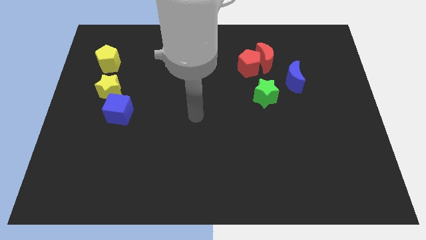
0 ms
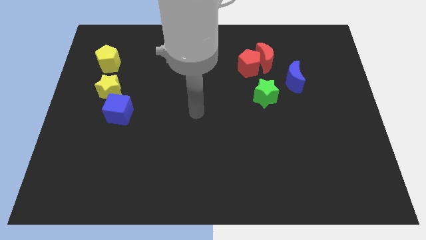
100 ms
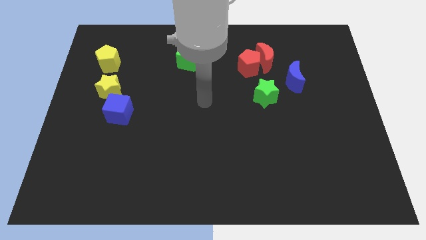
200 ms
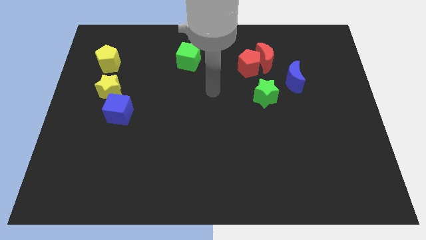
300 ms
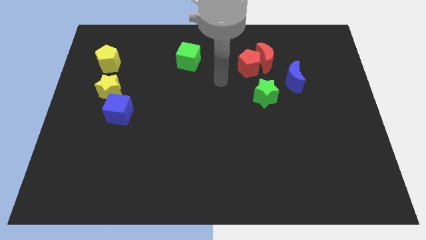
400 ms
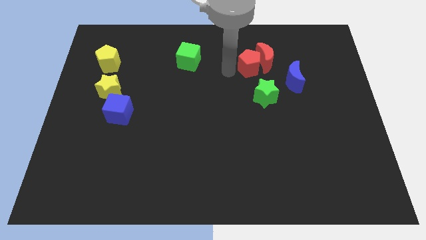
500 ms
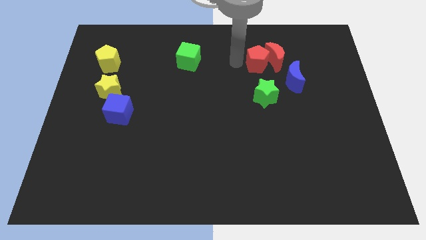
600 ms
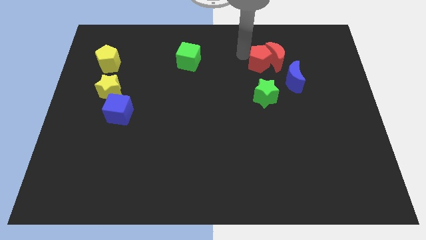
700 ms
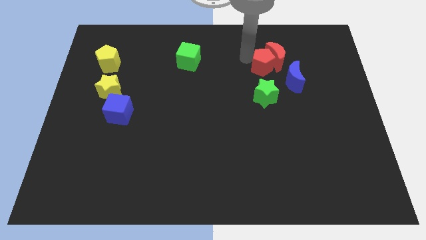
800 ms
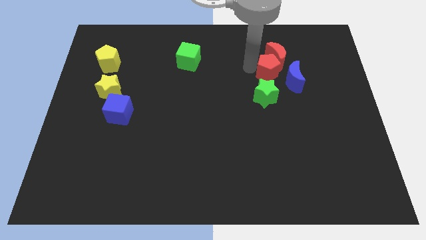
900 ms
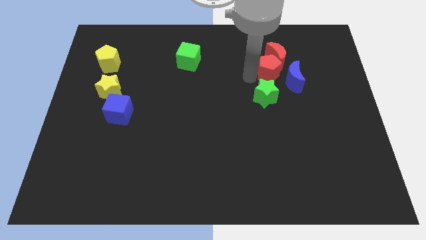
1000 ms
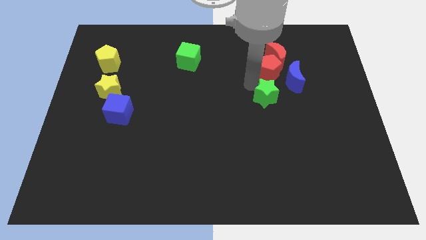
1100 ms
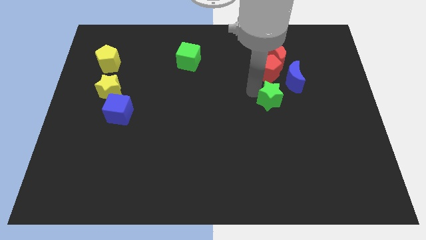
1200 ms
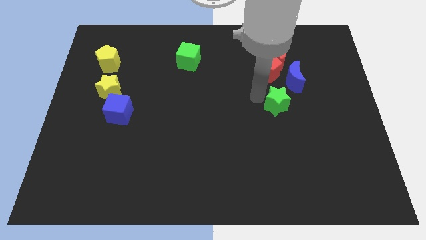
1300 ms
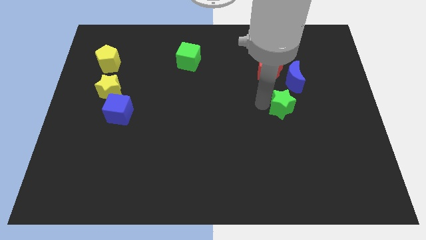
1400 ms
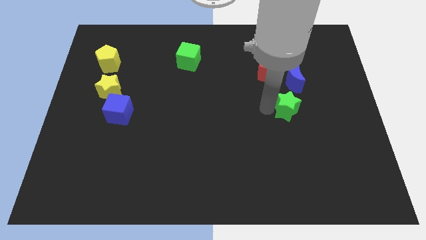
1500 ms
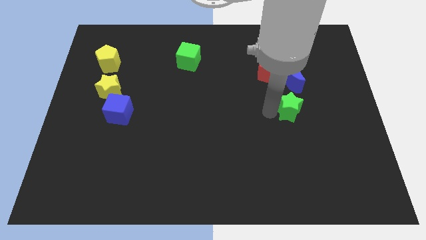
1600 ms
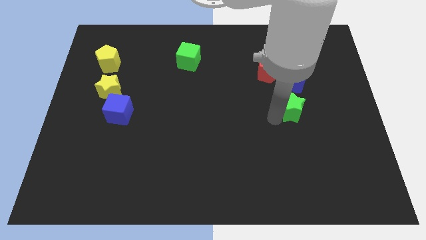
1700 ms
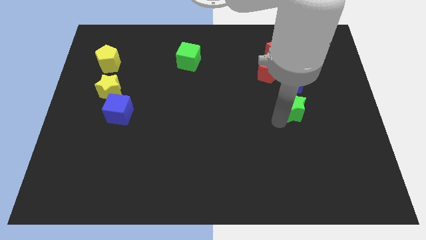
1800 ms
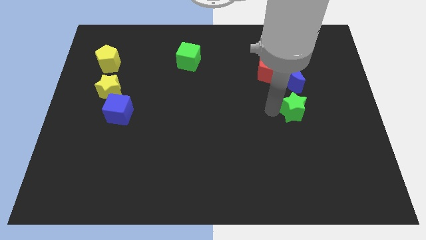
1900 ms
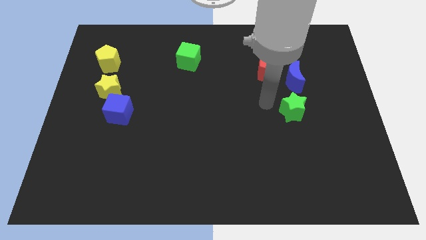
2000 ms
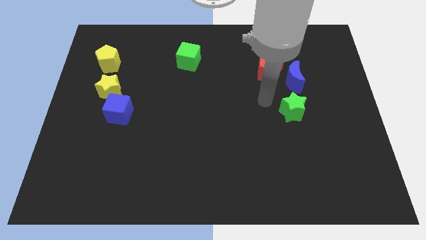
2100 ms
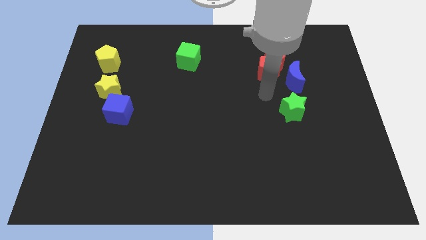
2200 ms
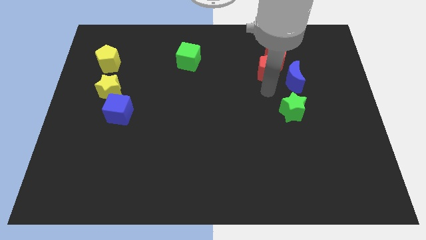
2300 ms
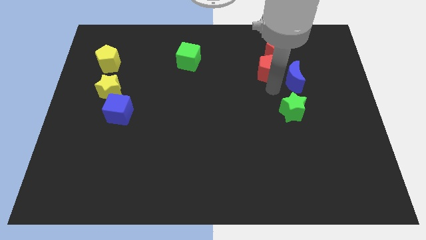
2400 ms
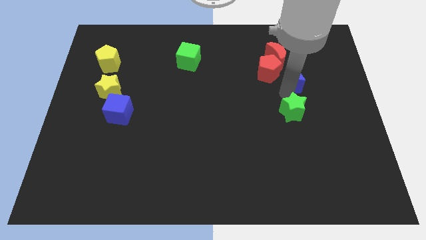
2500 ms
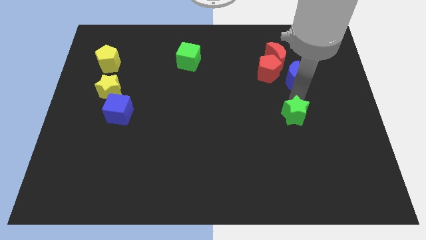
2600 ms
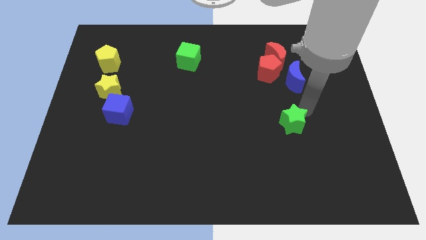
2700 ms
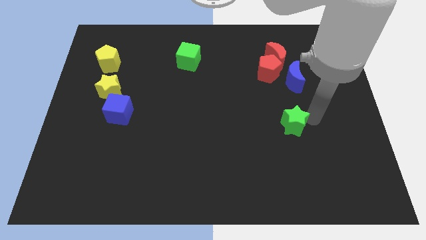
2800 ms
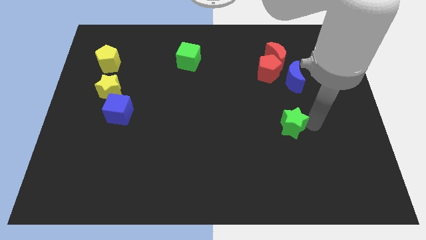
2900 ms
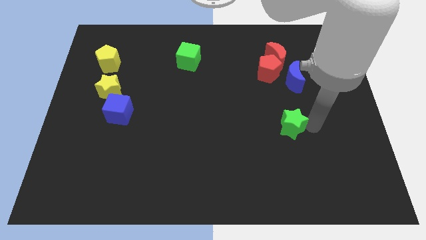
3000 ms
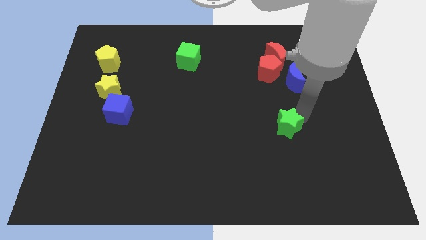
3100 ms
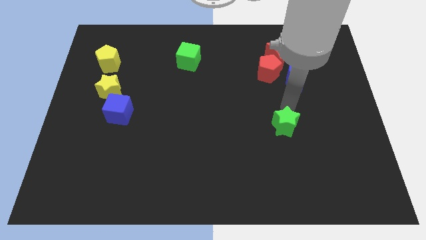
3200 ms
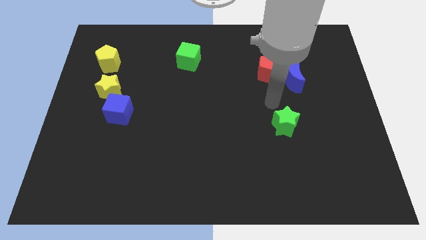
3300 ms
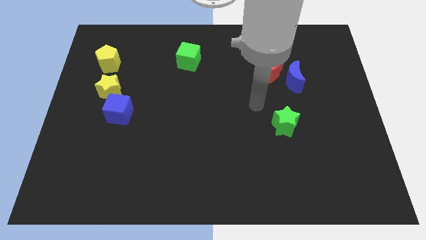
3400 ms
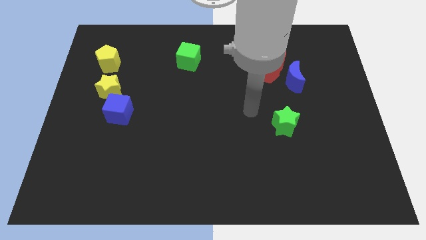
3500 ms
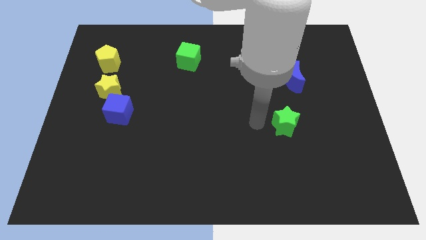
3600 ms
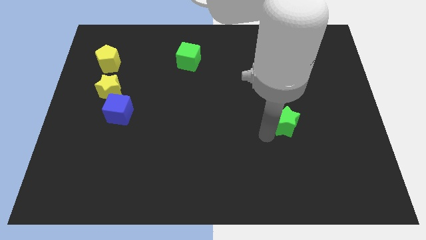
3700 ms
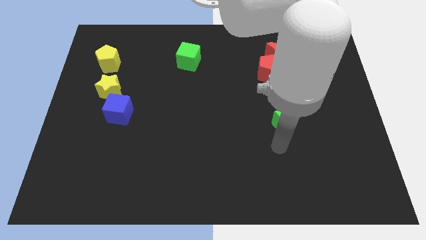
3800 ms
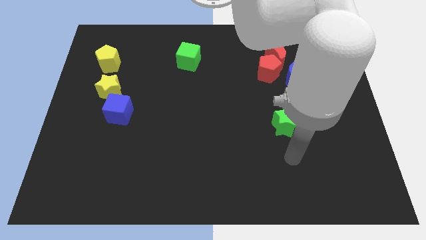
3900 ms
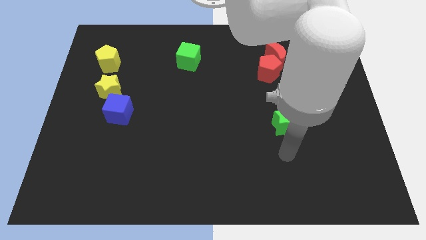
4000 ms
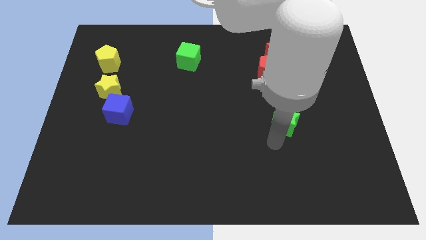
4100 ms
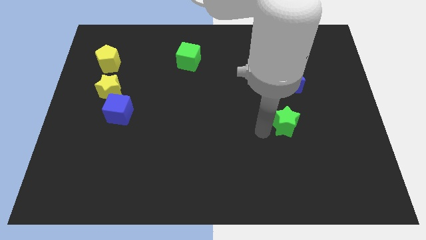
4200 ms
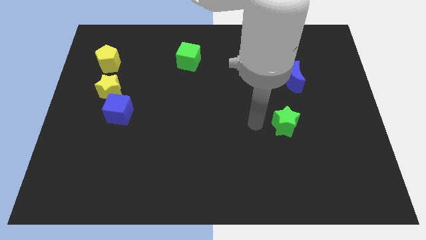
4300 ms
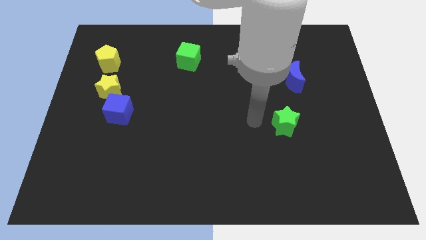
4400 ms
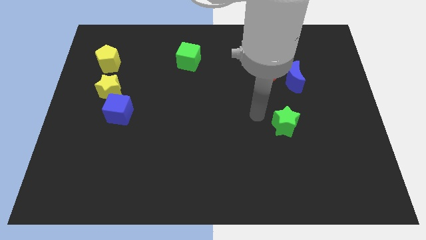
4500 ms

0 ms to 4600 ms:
move the green star to the bottom of red pentagon

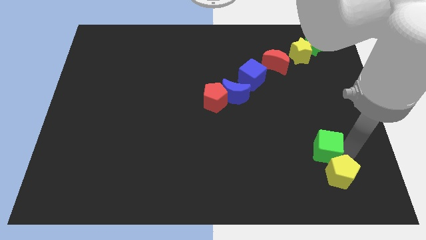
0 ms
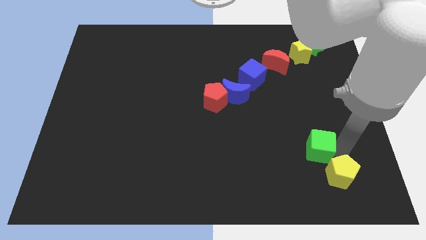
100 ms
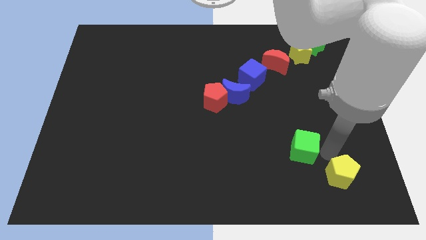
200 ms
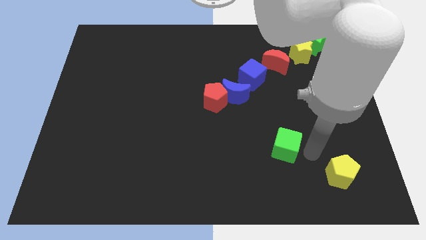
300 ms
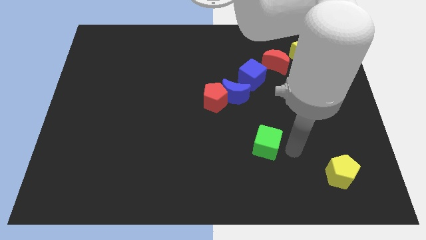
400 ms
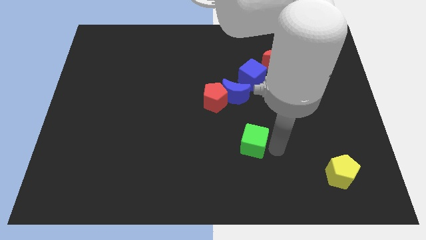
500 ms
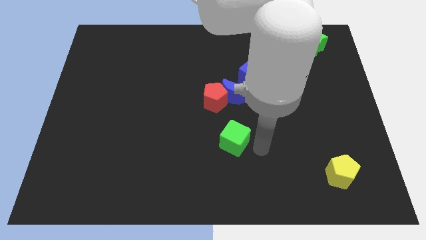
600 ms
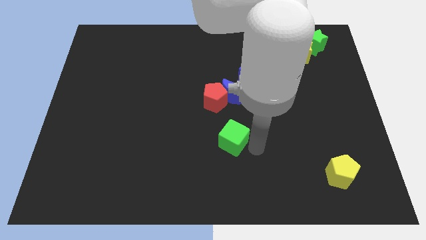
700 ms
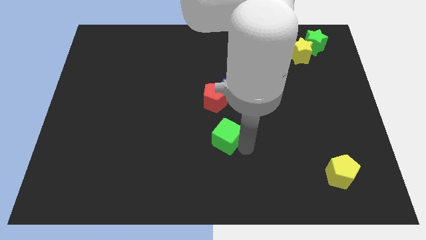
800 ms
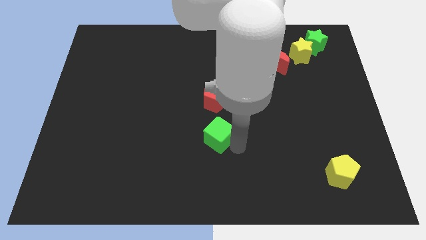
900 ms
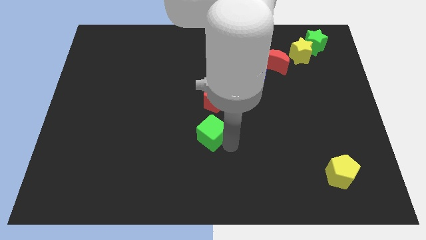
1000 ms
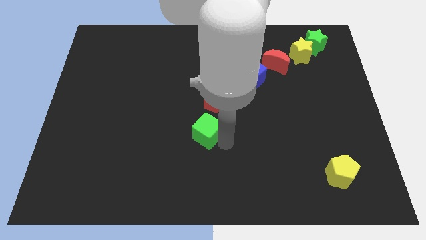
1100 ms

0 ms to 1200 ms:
separate green cube from the yellow pentagon

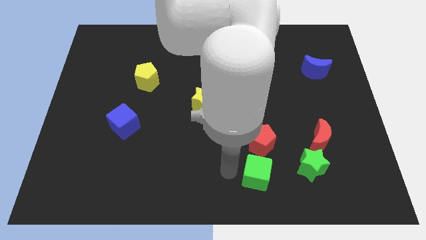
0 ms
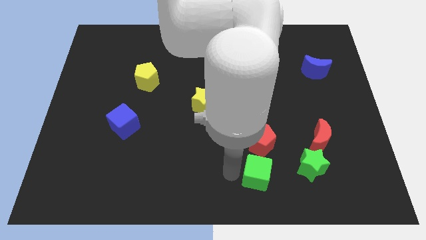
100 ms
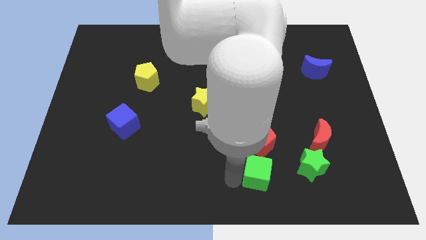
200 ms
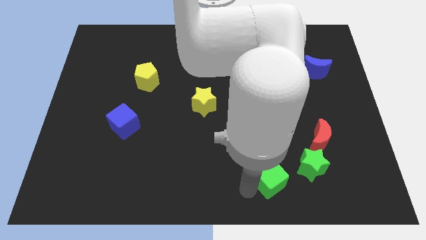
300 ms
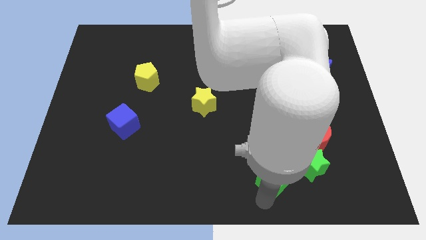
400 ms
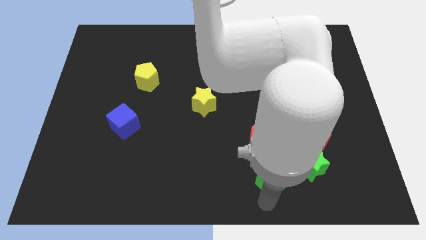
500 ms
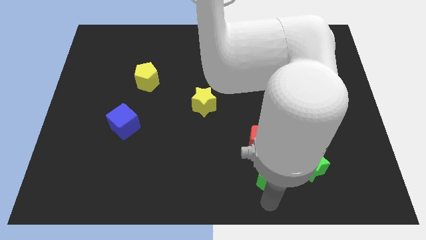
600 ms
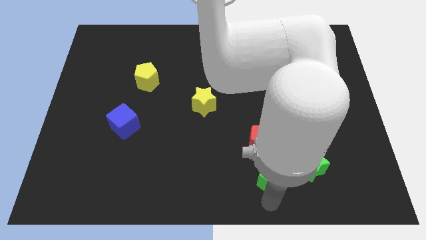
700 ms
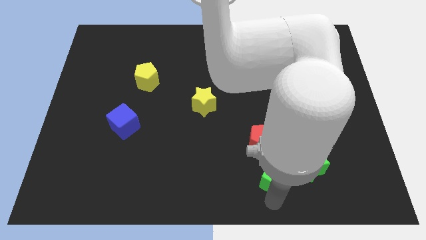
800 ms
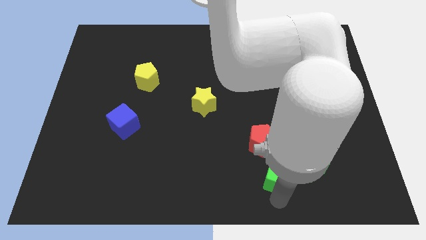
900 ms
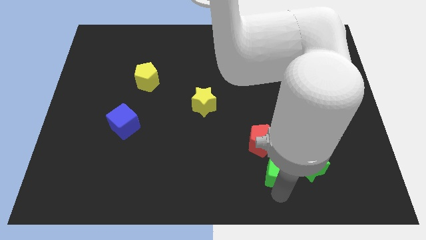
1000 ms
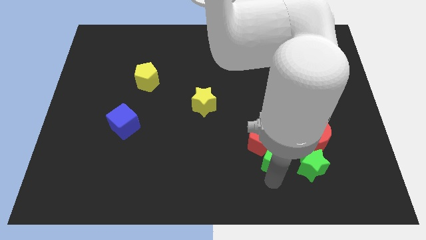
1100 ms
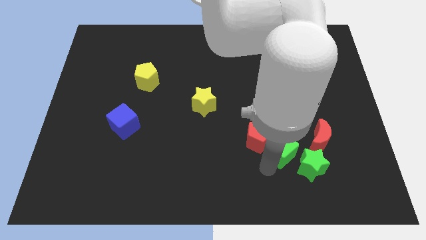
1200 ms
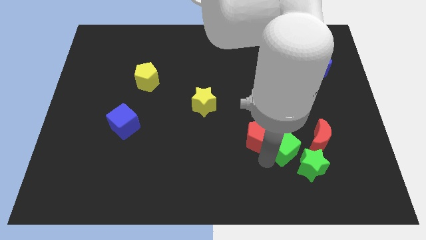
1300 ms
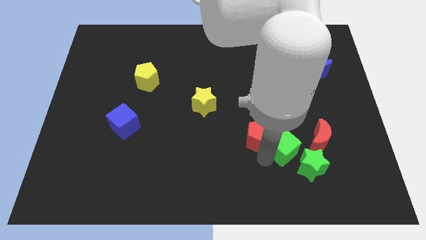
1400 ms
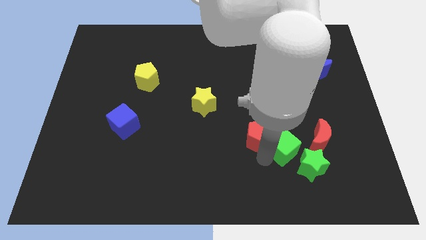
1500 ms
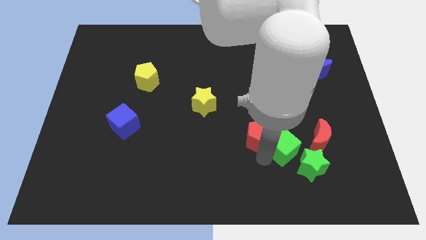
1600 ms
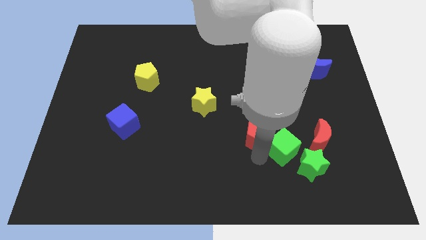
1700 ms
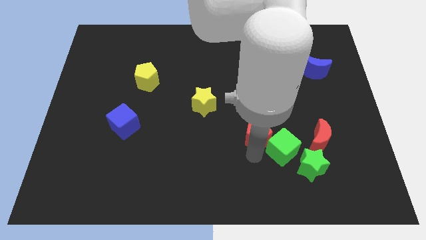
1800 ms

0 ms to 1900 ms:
move the green cube close to the red pentagon

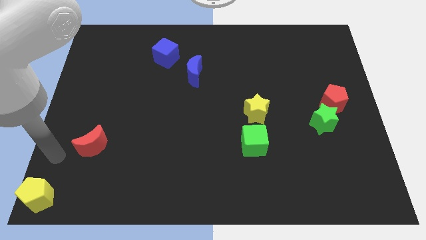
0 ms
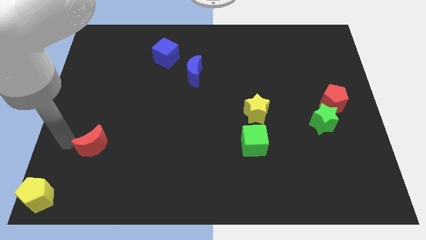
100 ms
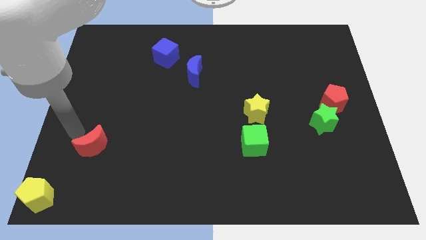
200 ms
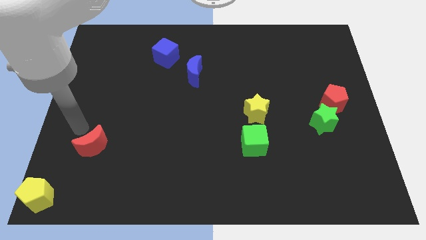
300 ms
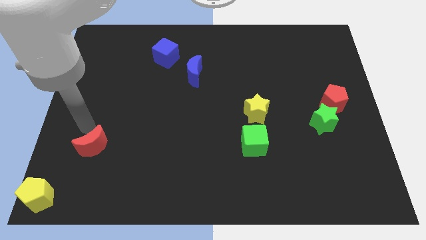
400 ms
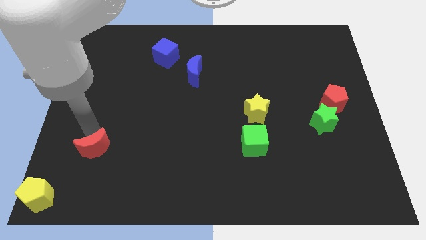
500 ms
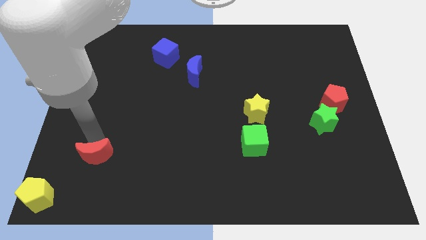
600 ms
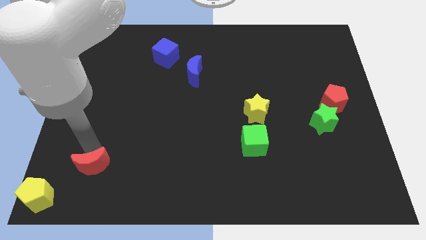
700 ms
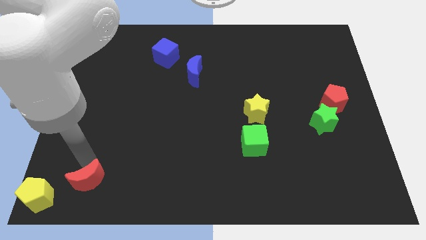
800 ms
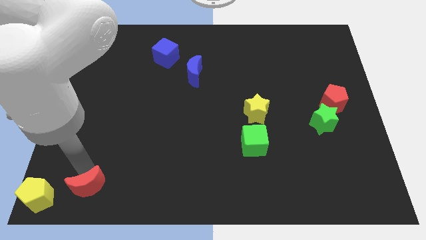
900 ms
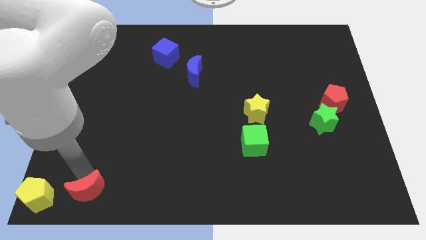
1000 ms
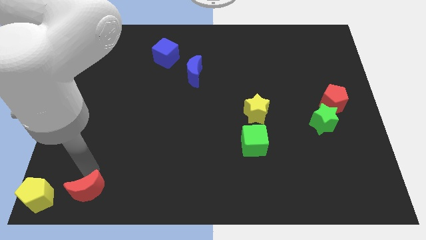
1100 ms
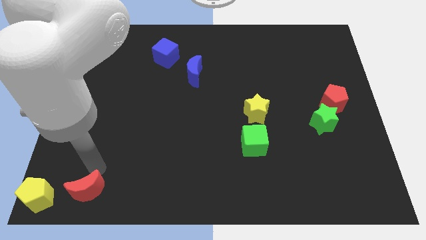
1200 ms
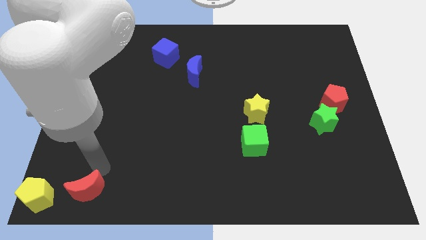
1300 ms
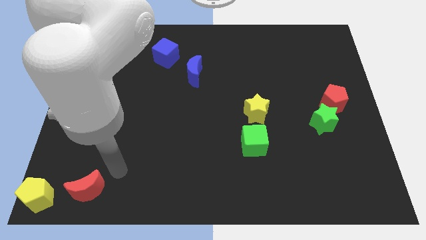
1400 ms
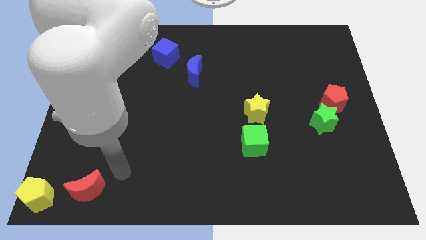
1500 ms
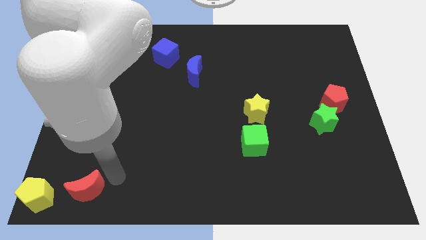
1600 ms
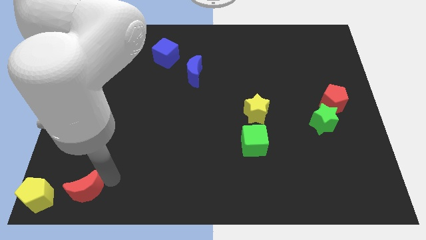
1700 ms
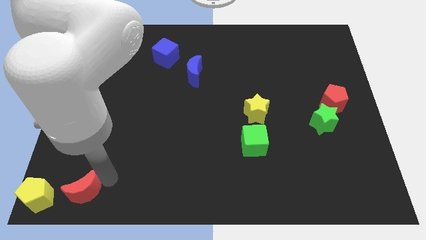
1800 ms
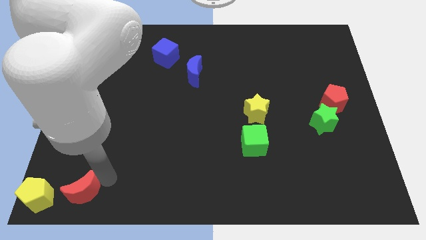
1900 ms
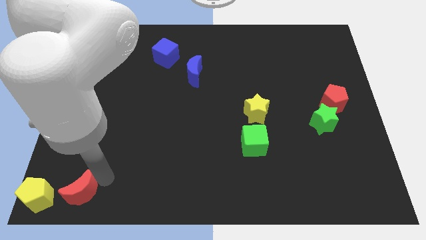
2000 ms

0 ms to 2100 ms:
put the red moon right to the yellow pentagon
